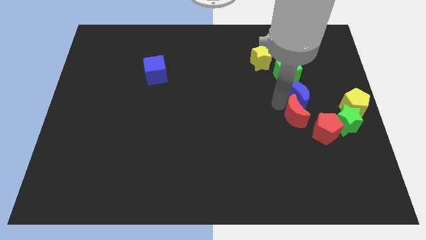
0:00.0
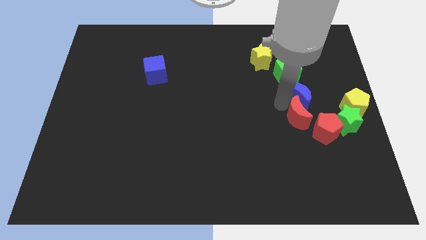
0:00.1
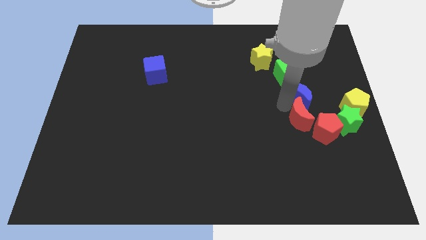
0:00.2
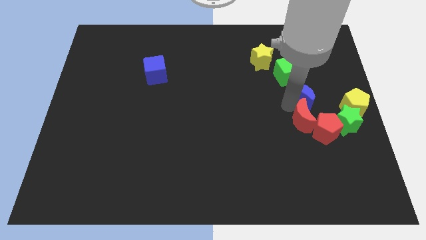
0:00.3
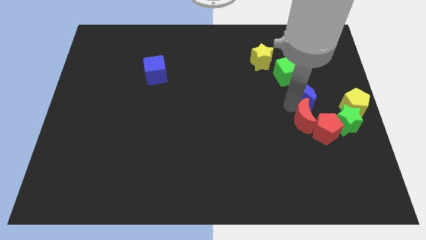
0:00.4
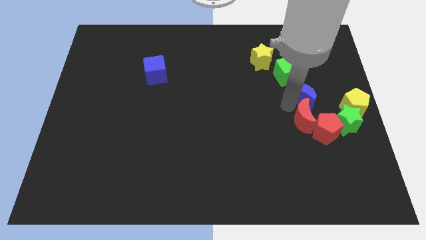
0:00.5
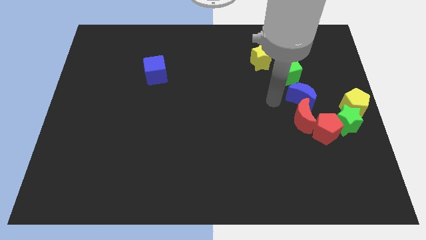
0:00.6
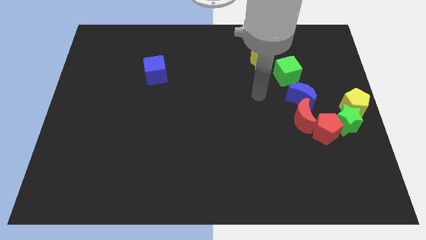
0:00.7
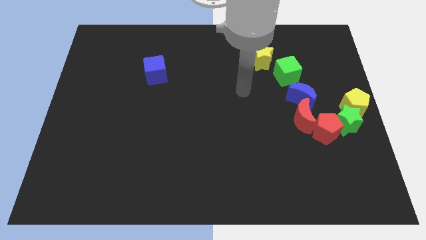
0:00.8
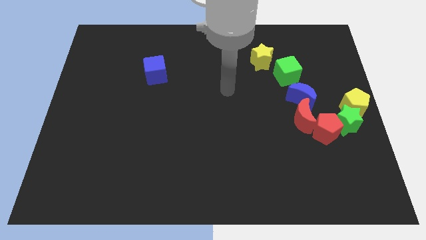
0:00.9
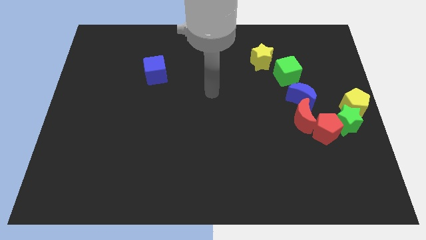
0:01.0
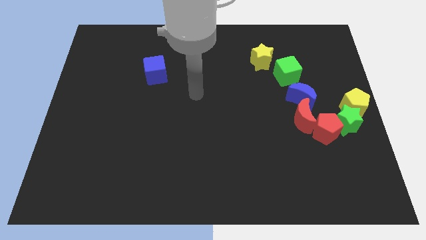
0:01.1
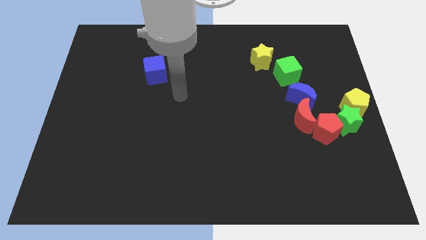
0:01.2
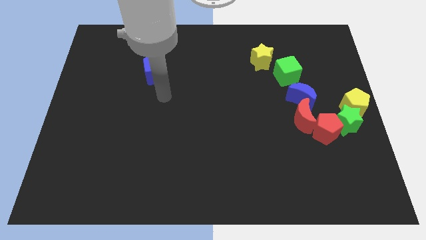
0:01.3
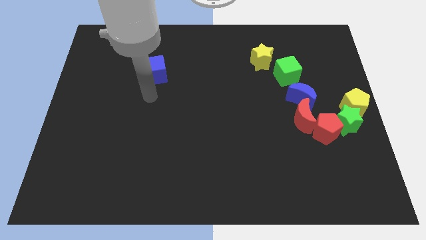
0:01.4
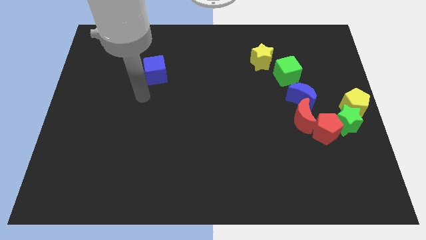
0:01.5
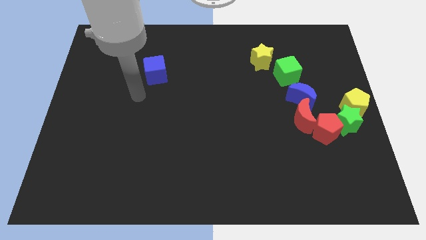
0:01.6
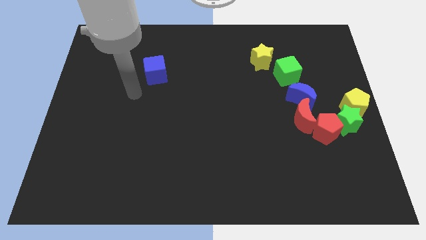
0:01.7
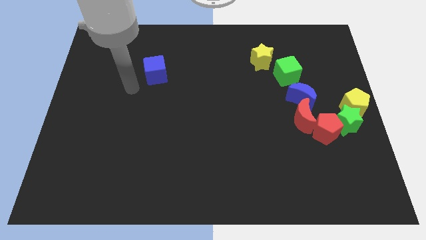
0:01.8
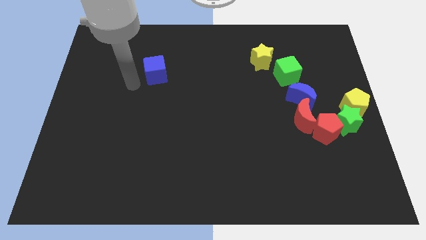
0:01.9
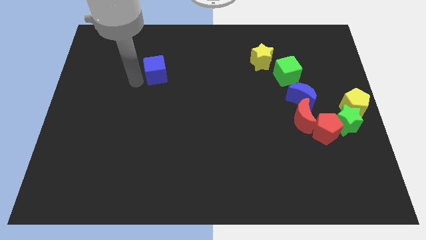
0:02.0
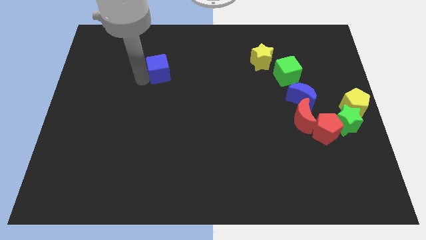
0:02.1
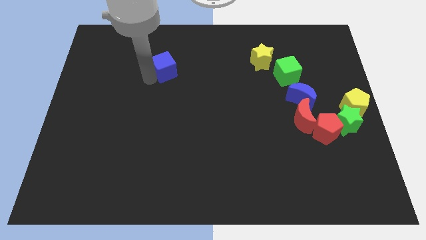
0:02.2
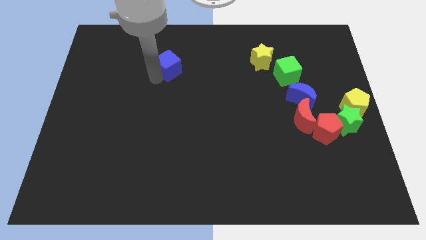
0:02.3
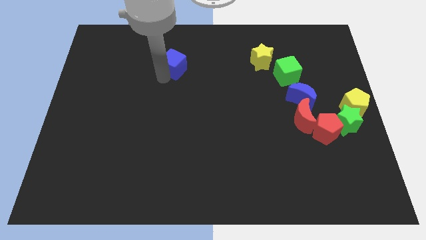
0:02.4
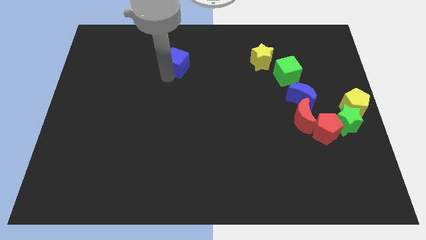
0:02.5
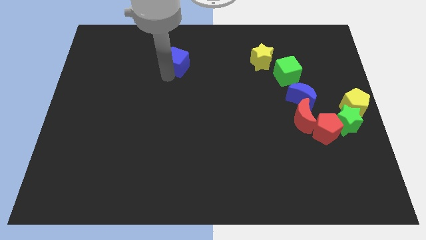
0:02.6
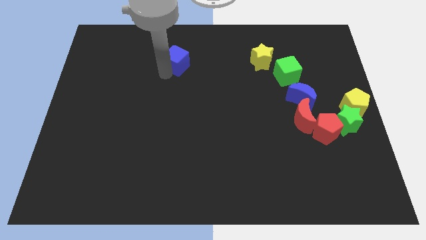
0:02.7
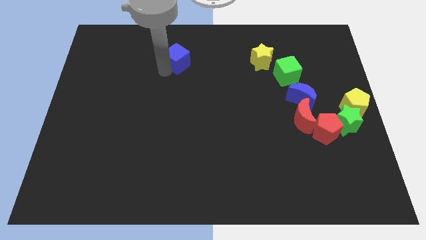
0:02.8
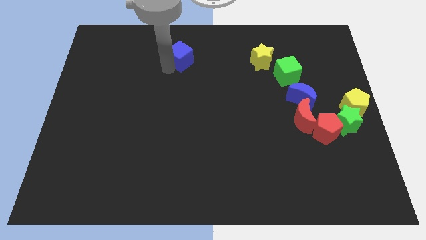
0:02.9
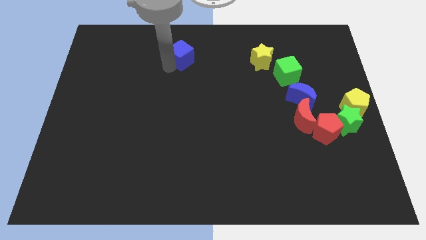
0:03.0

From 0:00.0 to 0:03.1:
move the blue cube left to the yellow star

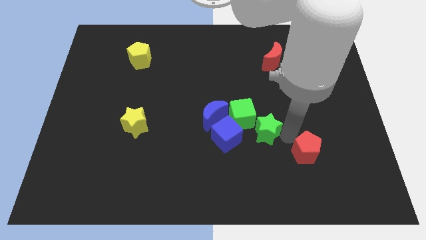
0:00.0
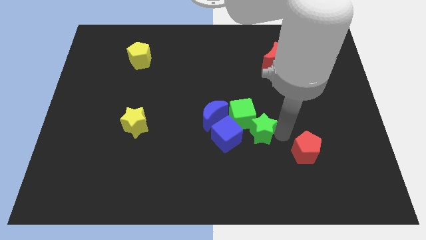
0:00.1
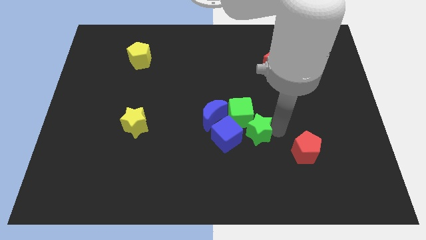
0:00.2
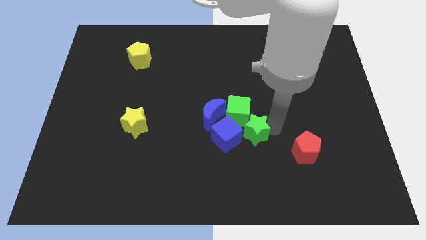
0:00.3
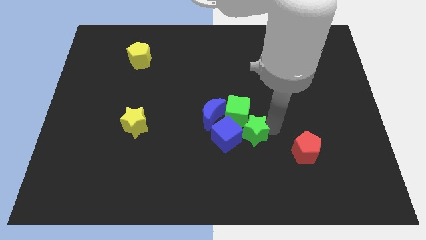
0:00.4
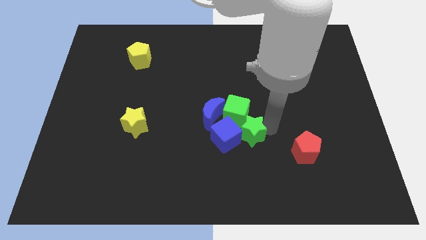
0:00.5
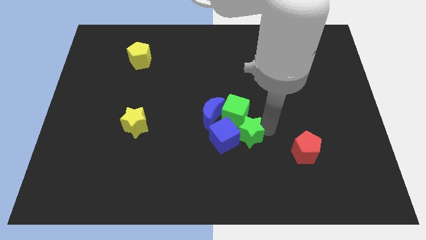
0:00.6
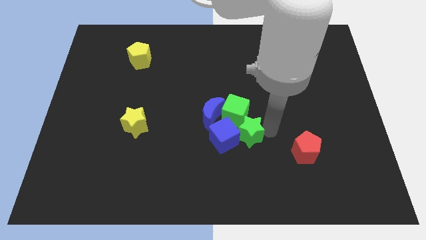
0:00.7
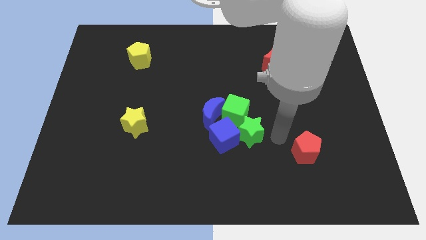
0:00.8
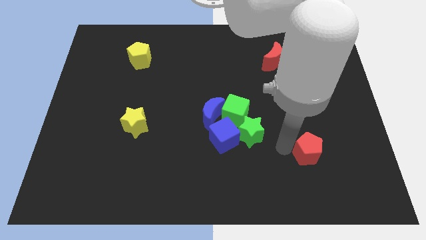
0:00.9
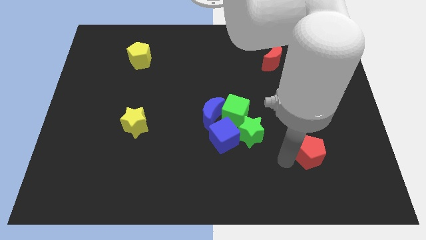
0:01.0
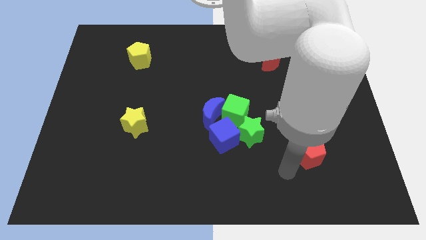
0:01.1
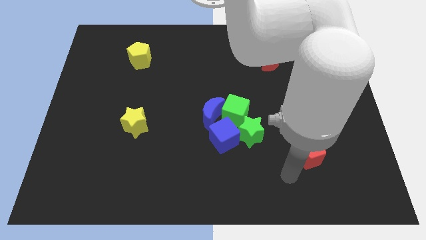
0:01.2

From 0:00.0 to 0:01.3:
place green star to the right side of the blue cube

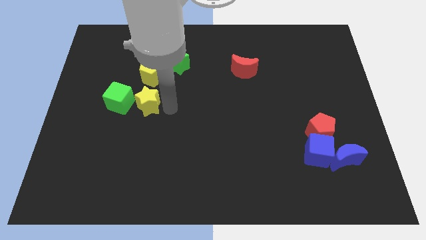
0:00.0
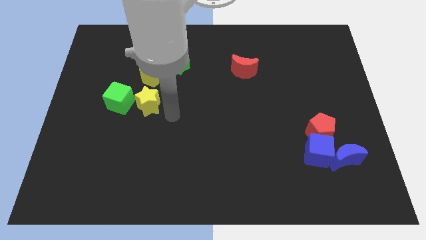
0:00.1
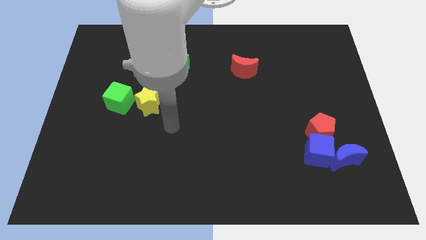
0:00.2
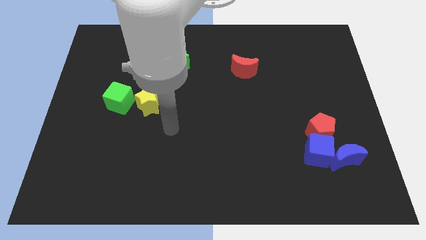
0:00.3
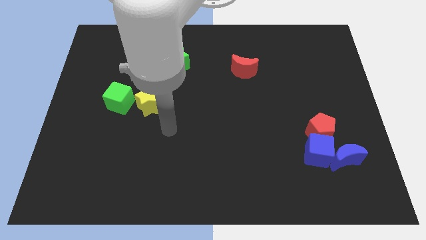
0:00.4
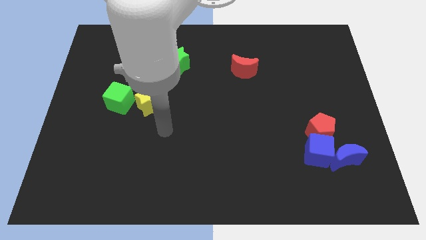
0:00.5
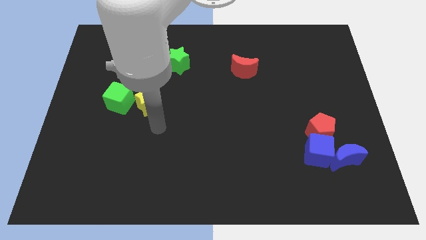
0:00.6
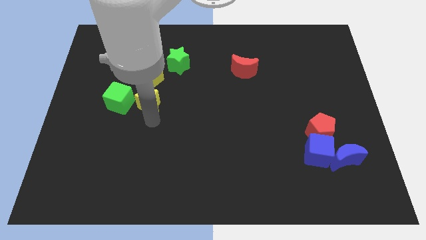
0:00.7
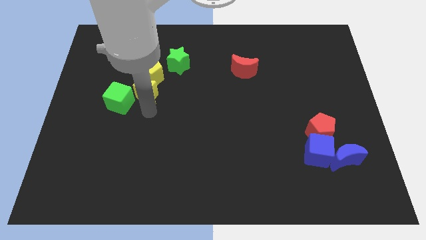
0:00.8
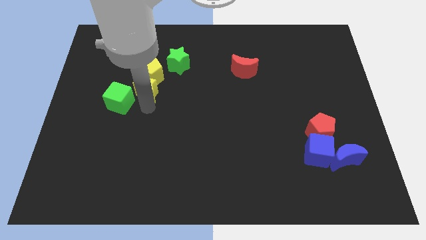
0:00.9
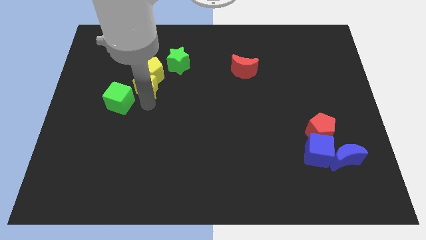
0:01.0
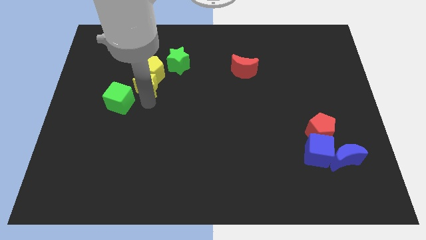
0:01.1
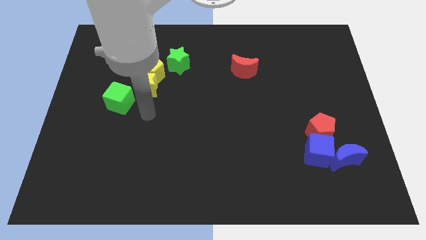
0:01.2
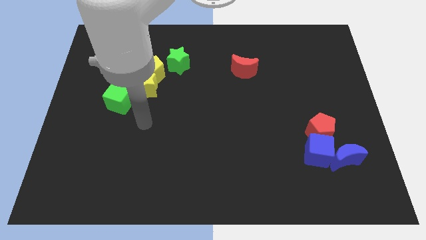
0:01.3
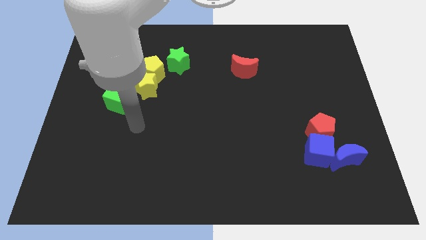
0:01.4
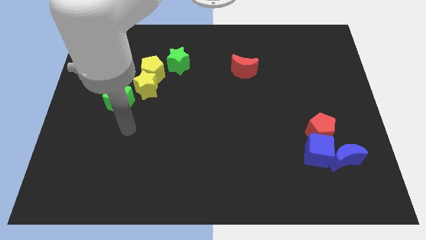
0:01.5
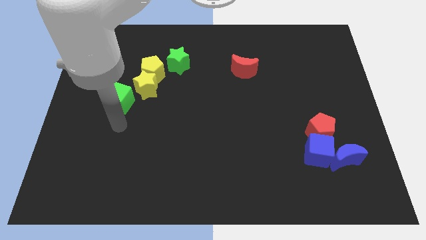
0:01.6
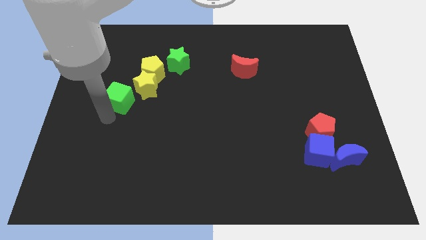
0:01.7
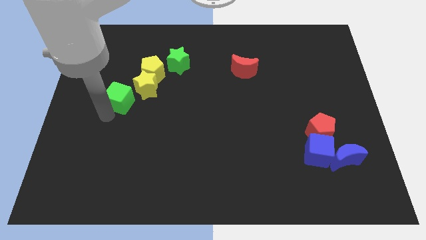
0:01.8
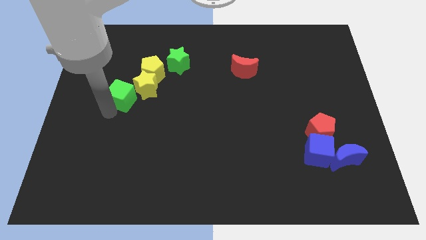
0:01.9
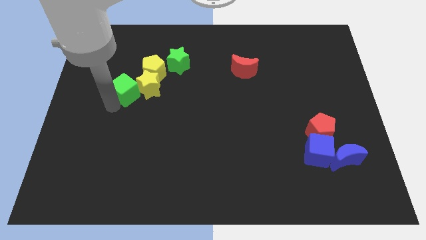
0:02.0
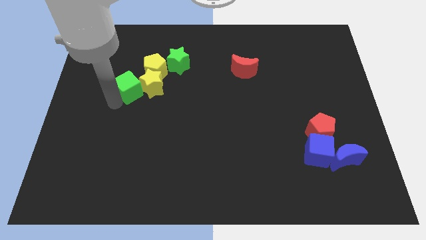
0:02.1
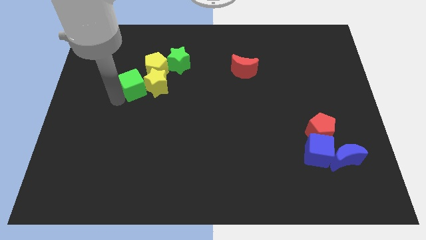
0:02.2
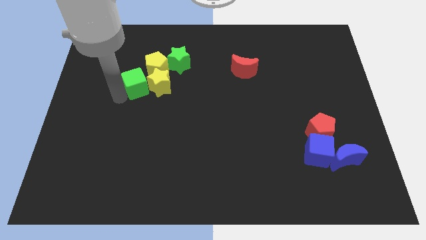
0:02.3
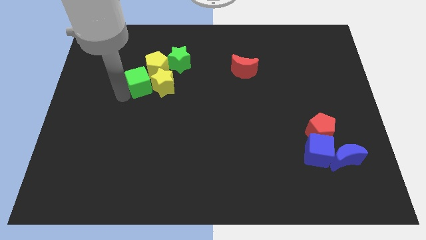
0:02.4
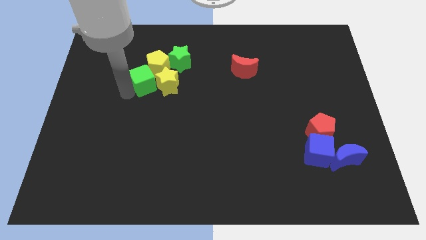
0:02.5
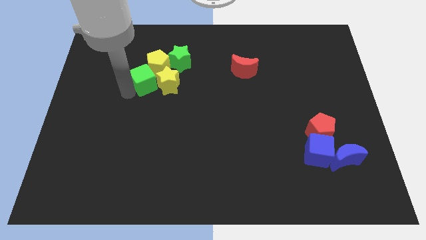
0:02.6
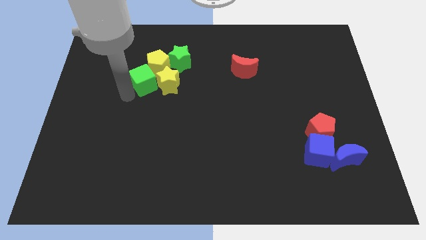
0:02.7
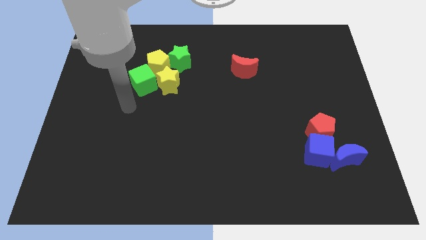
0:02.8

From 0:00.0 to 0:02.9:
move the green cube into the yellow pentagon and yellow star

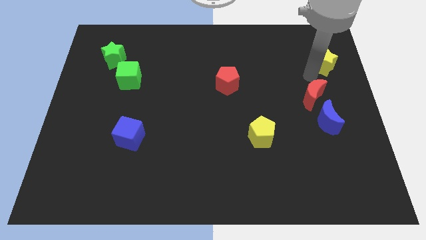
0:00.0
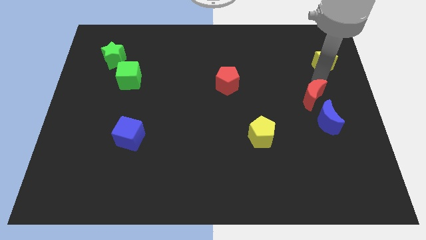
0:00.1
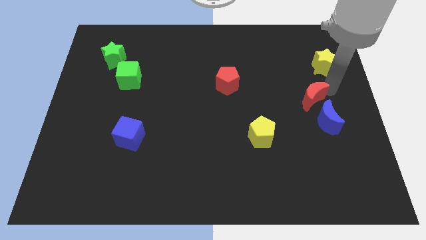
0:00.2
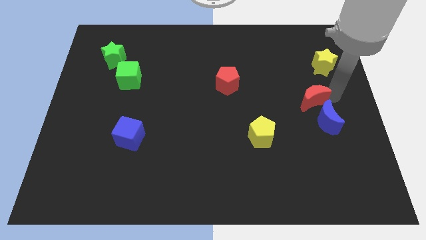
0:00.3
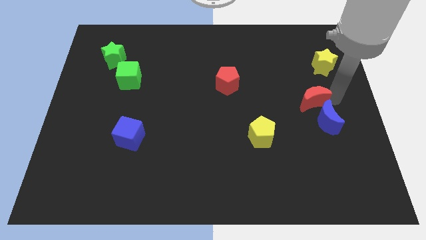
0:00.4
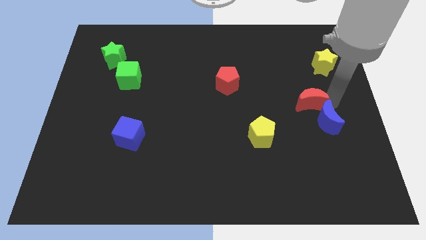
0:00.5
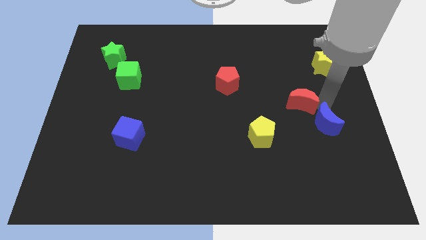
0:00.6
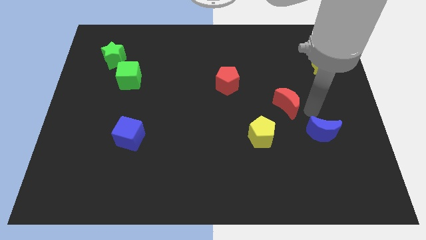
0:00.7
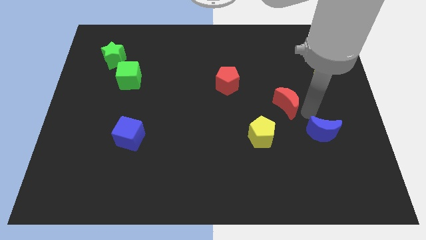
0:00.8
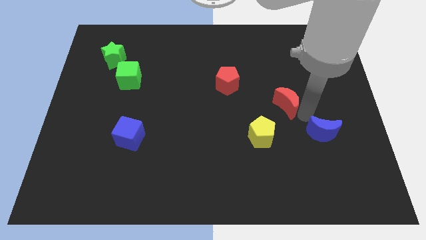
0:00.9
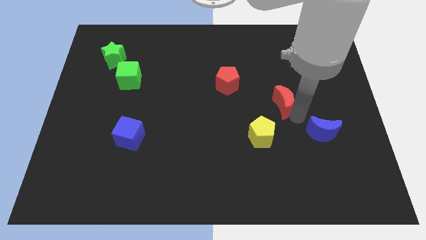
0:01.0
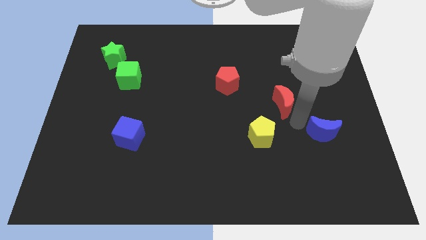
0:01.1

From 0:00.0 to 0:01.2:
put the red crescent diagonally in between the yellow star and the yellow pentagon

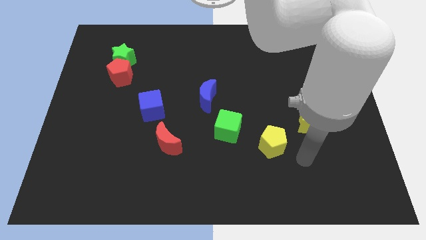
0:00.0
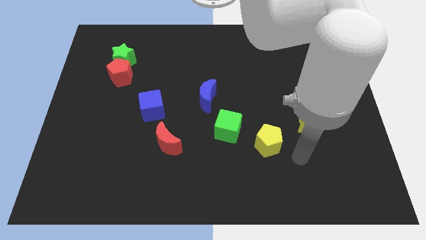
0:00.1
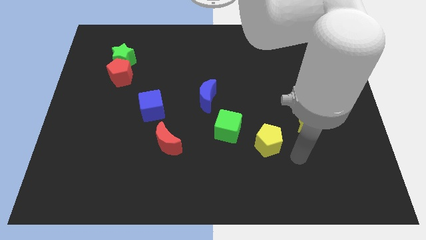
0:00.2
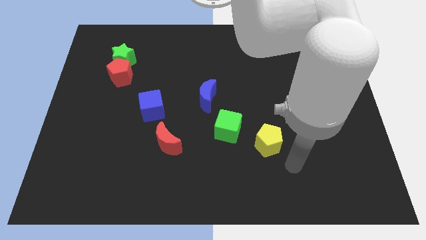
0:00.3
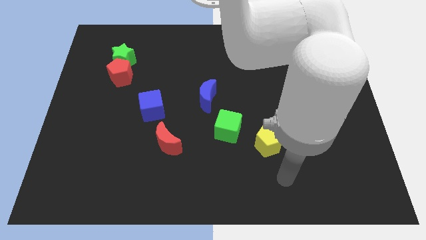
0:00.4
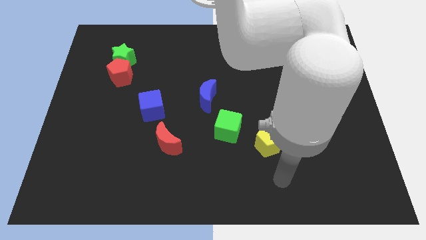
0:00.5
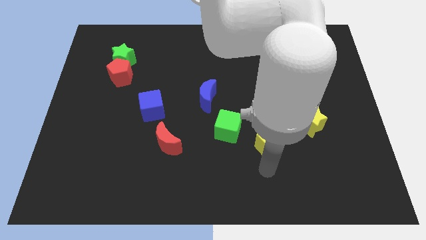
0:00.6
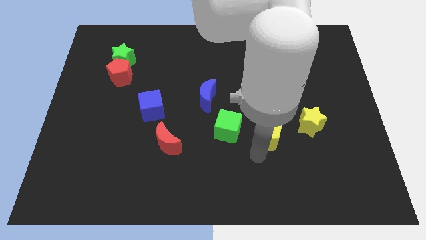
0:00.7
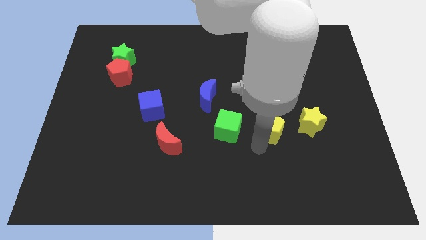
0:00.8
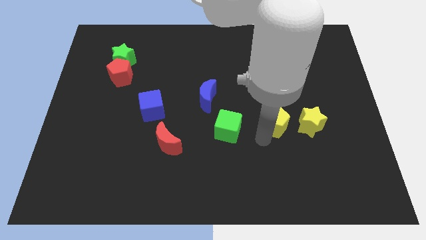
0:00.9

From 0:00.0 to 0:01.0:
push the yellow pentagon diagonal to the right to the green cube
